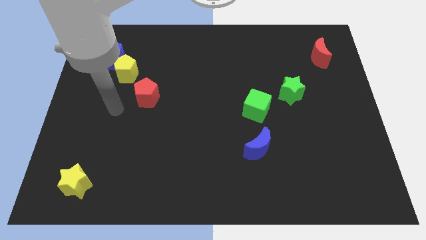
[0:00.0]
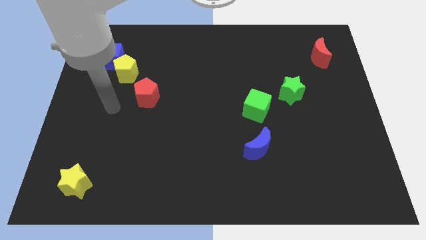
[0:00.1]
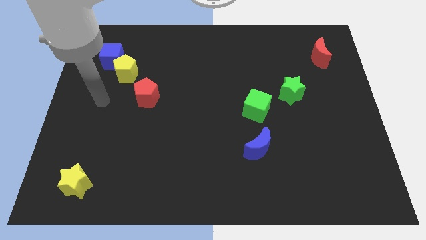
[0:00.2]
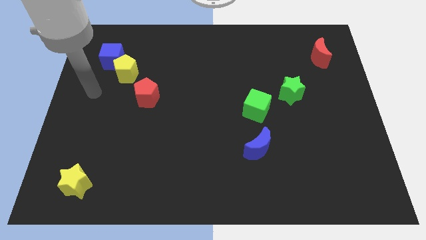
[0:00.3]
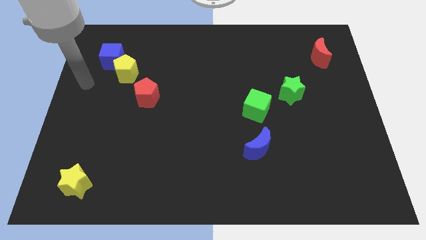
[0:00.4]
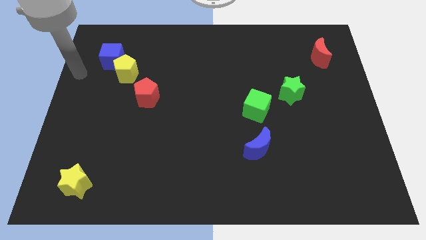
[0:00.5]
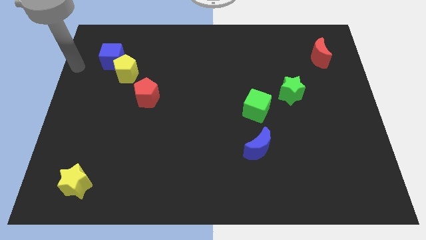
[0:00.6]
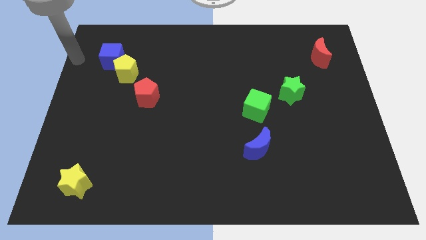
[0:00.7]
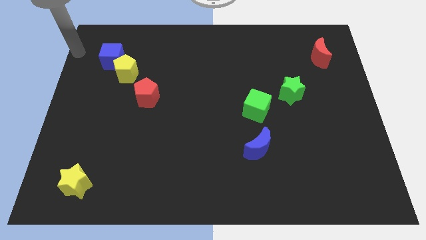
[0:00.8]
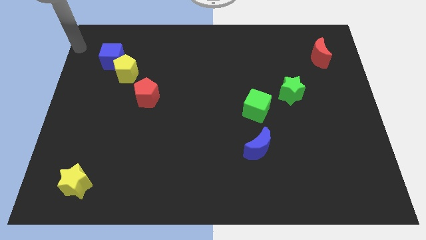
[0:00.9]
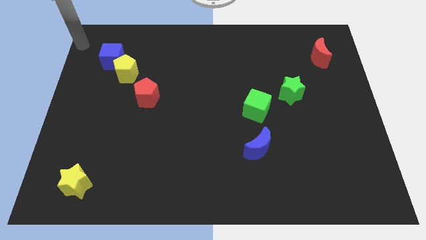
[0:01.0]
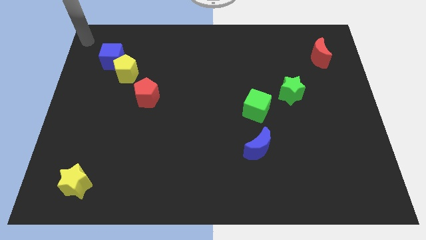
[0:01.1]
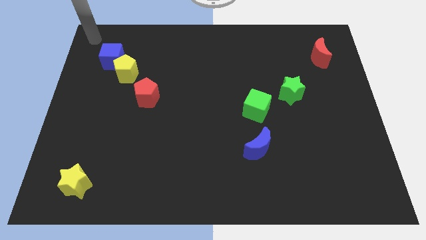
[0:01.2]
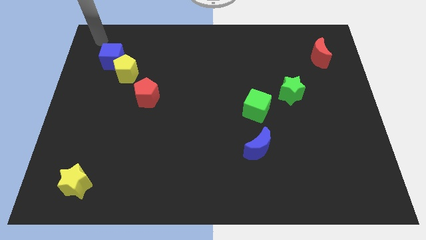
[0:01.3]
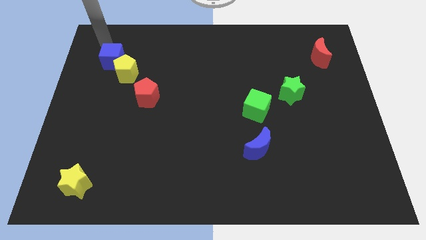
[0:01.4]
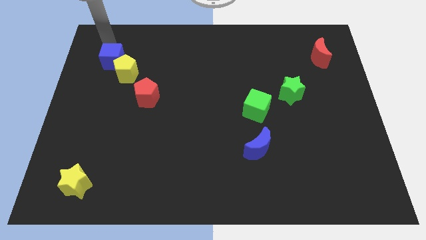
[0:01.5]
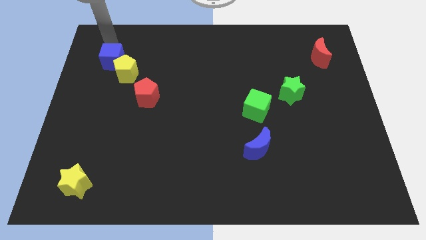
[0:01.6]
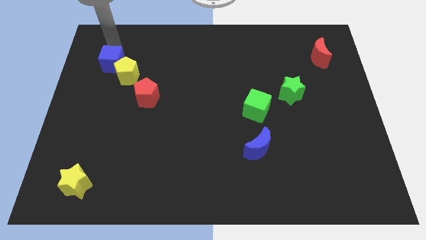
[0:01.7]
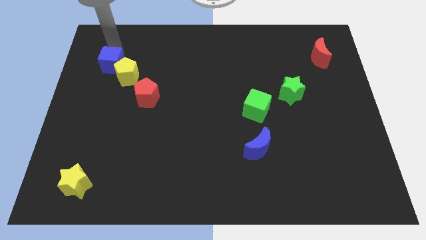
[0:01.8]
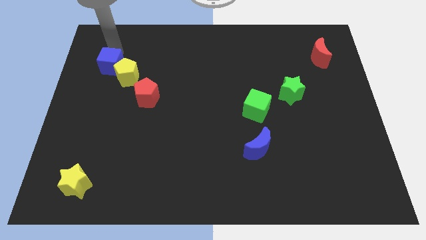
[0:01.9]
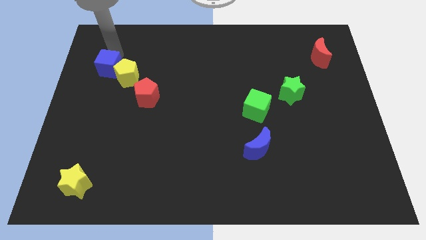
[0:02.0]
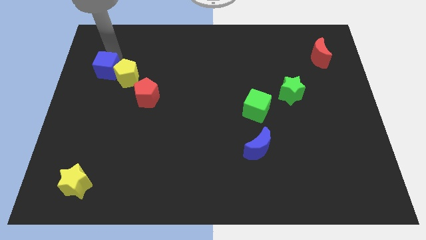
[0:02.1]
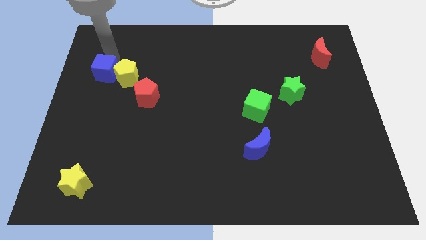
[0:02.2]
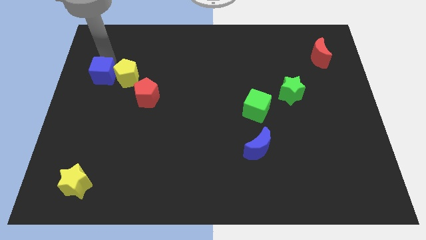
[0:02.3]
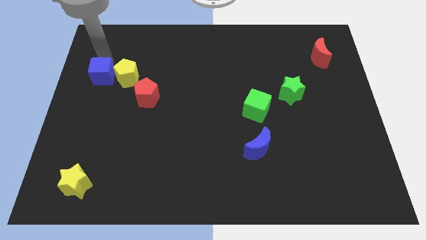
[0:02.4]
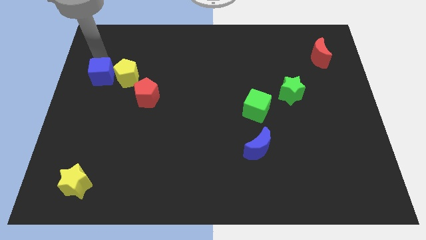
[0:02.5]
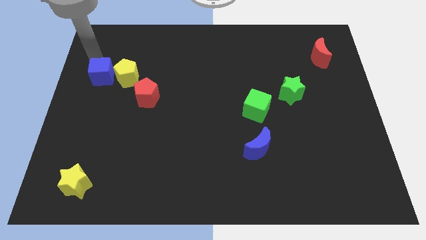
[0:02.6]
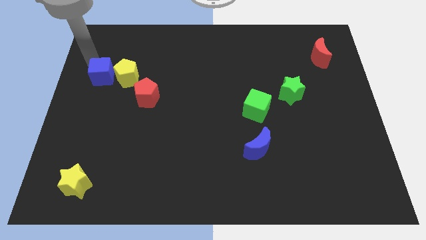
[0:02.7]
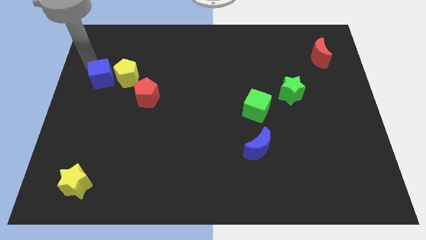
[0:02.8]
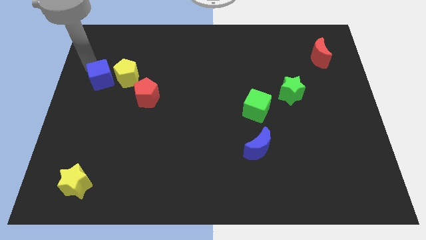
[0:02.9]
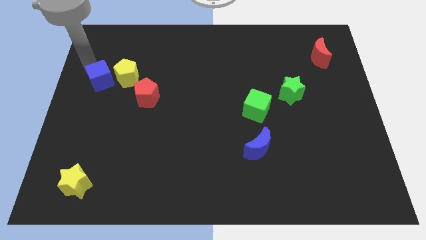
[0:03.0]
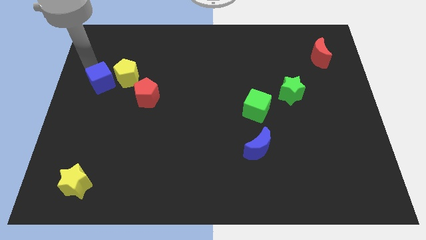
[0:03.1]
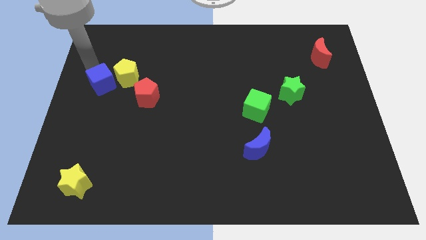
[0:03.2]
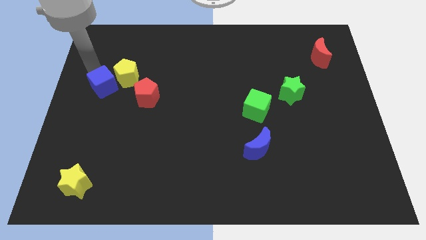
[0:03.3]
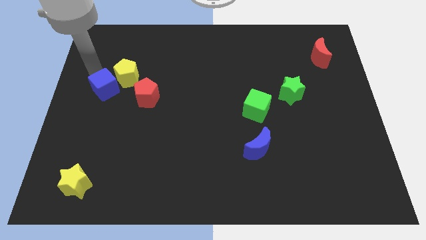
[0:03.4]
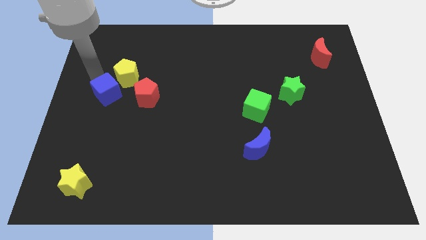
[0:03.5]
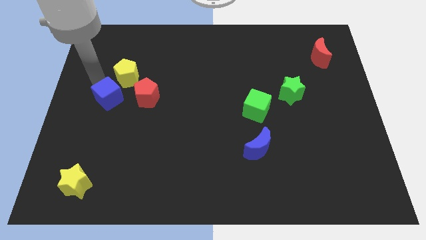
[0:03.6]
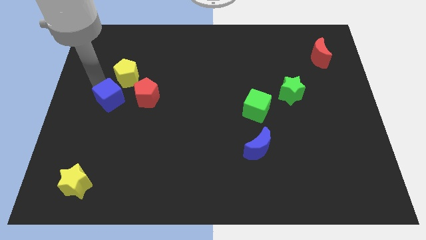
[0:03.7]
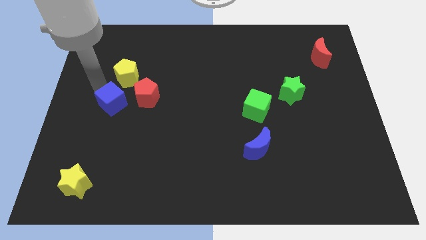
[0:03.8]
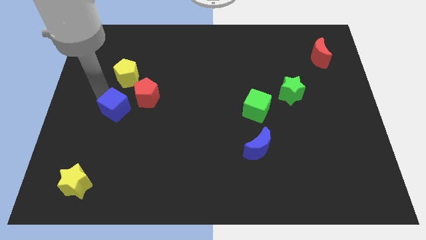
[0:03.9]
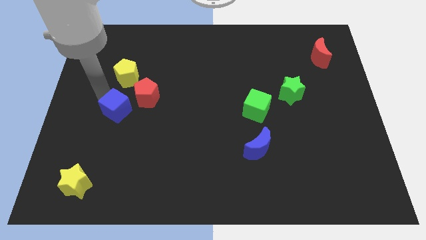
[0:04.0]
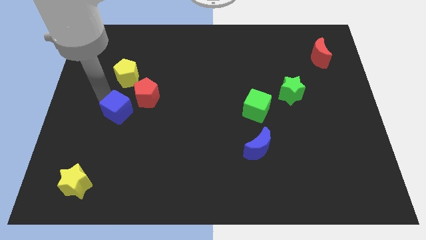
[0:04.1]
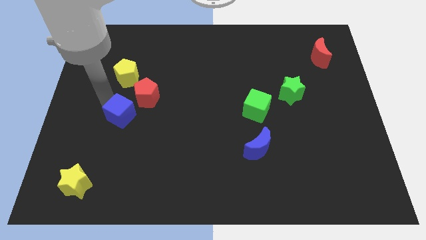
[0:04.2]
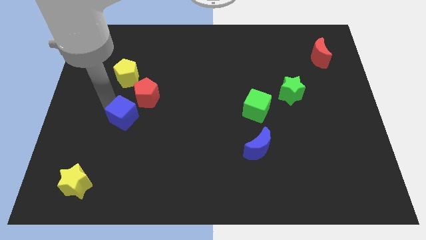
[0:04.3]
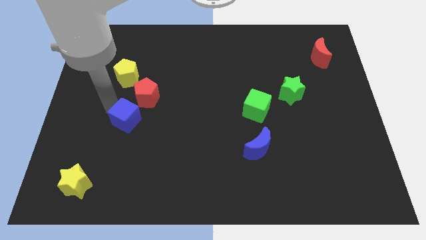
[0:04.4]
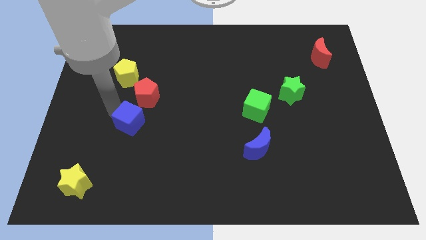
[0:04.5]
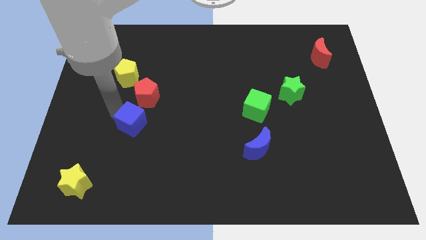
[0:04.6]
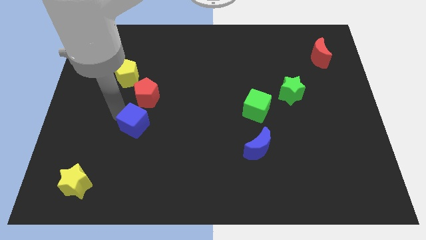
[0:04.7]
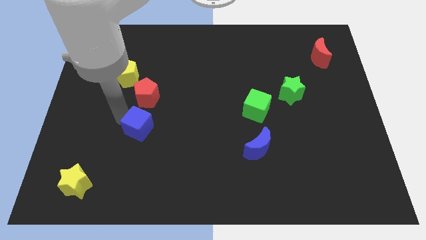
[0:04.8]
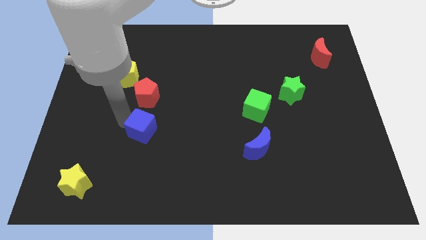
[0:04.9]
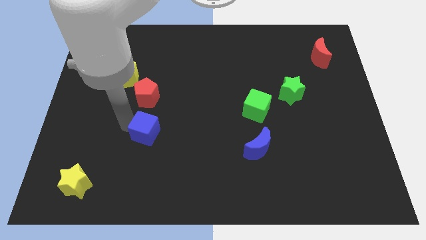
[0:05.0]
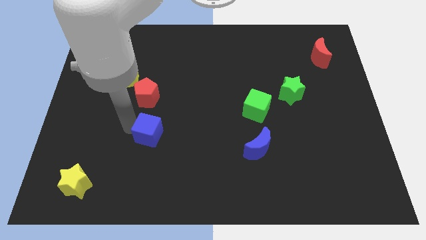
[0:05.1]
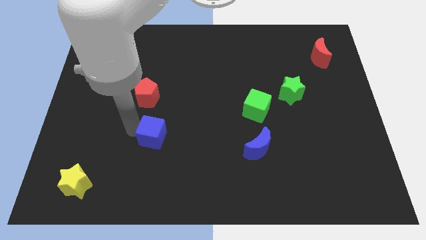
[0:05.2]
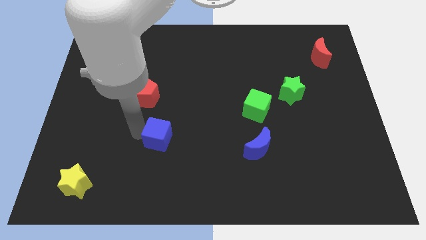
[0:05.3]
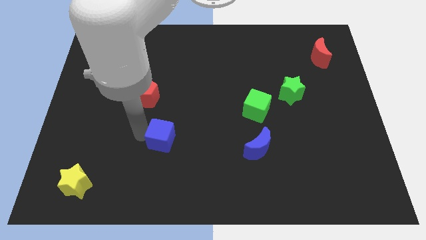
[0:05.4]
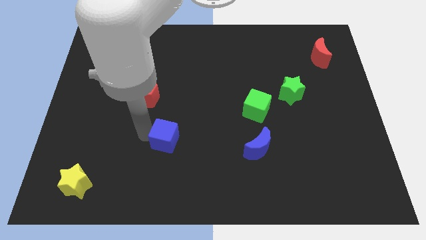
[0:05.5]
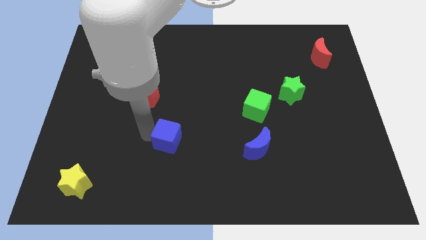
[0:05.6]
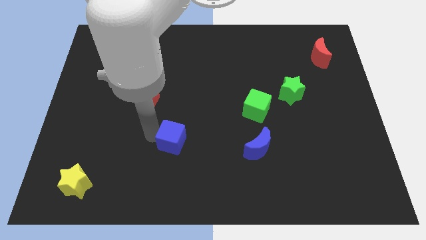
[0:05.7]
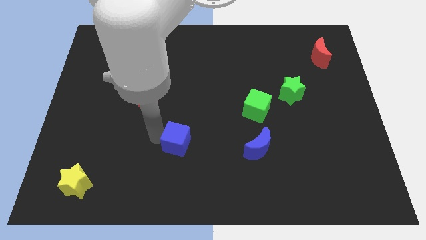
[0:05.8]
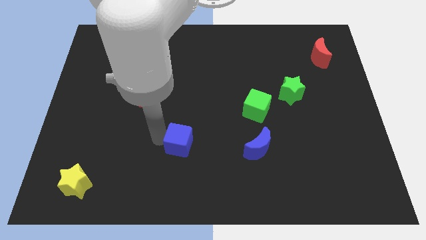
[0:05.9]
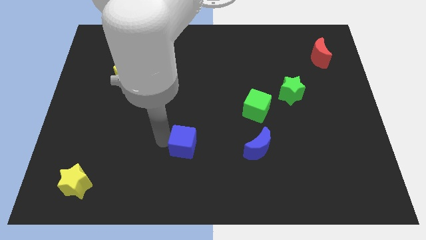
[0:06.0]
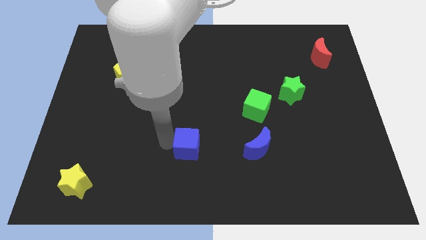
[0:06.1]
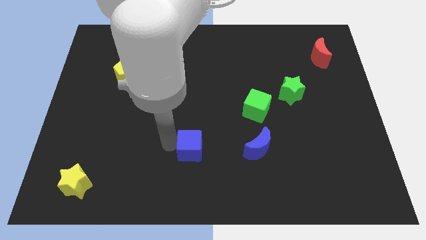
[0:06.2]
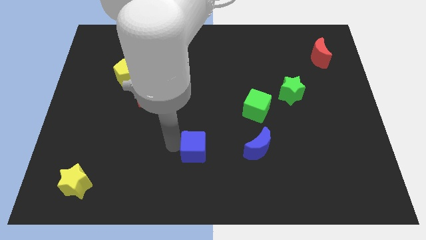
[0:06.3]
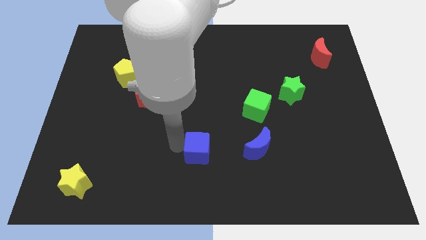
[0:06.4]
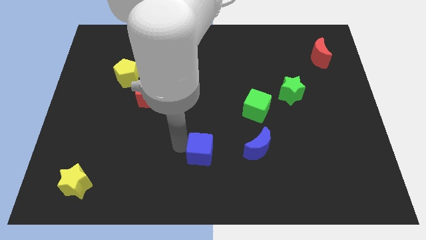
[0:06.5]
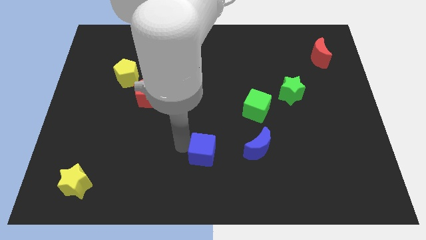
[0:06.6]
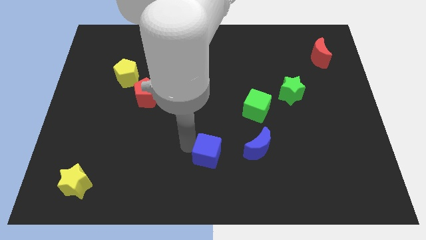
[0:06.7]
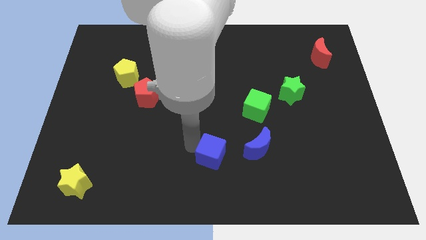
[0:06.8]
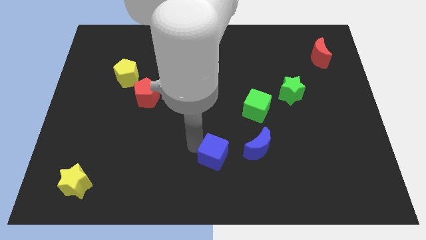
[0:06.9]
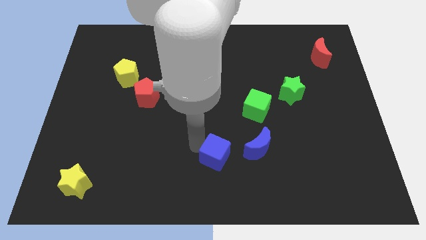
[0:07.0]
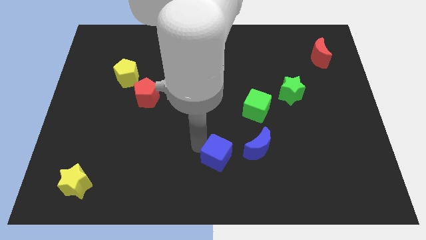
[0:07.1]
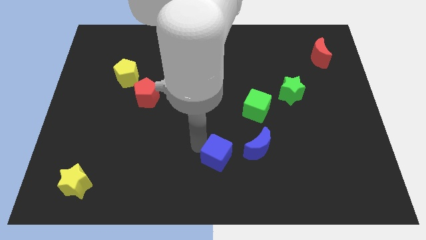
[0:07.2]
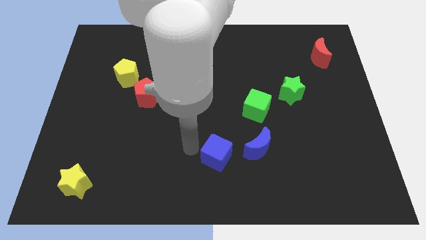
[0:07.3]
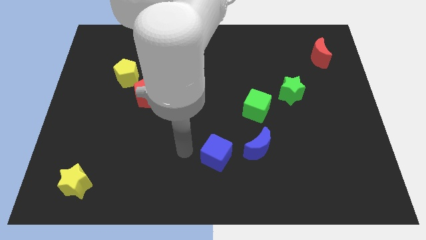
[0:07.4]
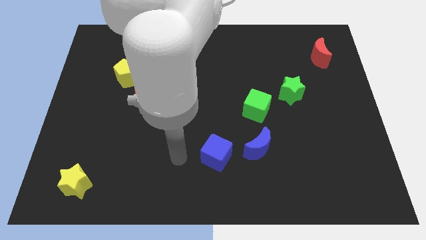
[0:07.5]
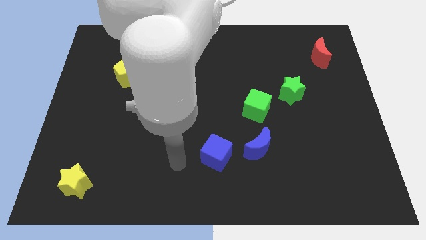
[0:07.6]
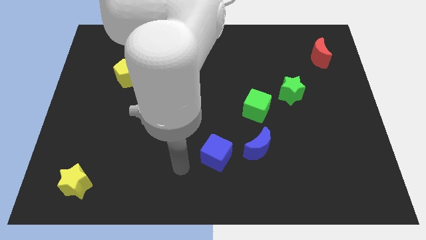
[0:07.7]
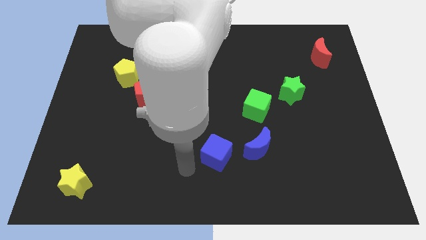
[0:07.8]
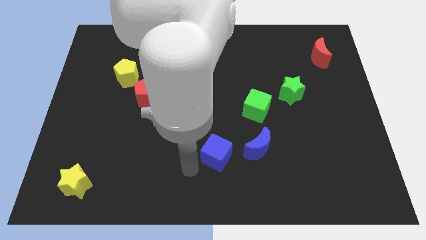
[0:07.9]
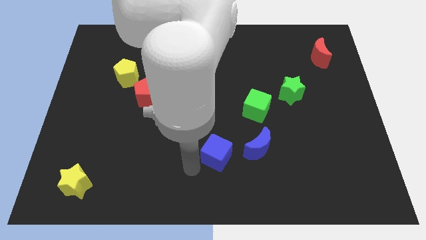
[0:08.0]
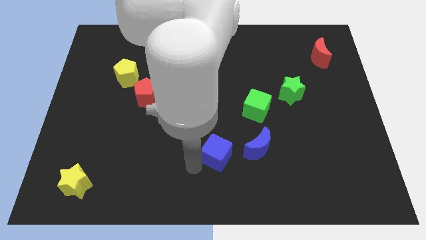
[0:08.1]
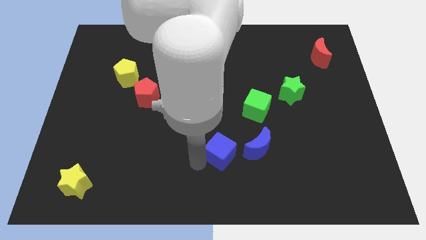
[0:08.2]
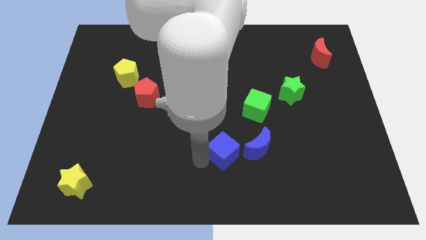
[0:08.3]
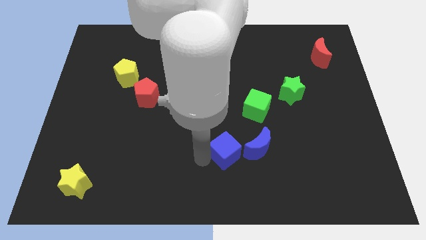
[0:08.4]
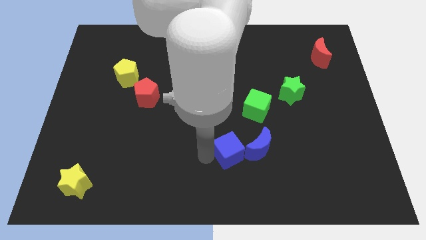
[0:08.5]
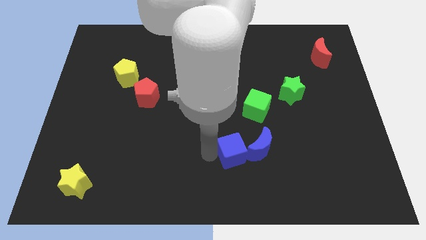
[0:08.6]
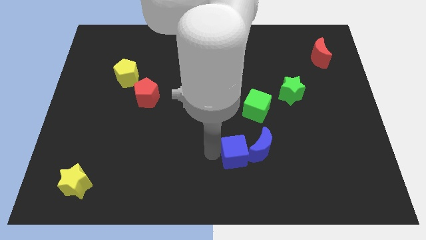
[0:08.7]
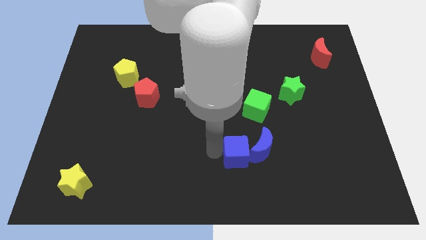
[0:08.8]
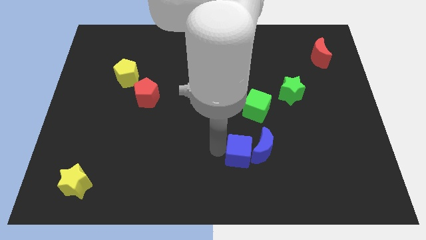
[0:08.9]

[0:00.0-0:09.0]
move the blue cube towards the blue moon
